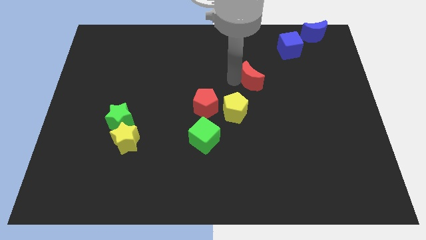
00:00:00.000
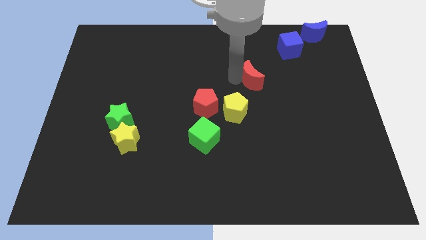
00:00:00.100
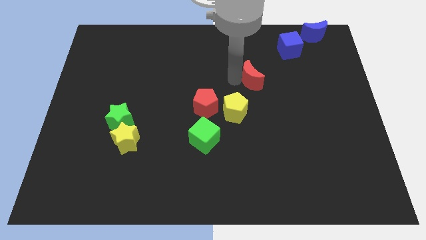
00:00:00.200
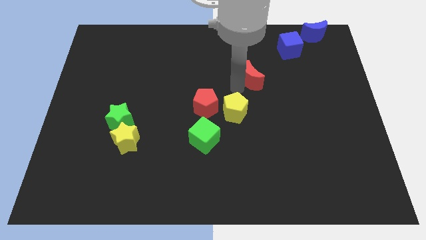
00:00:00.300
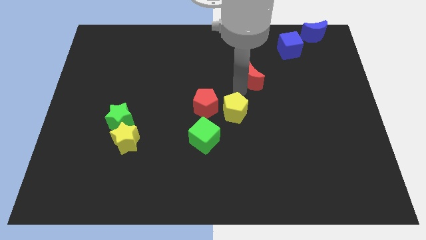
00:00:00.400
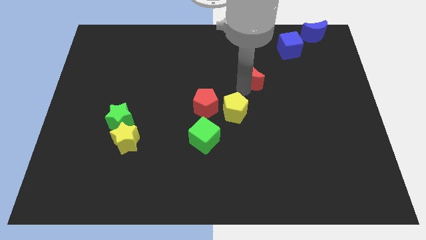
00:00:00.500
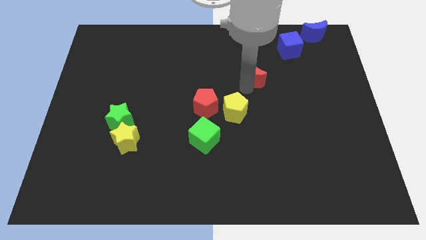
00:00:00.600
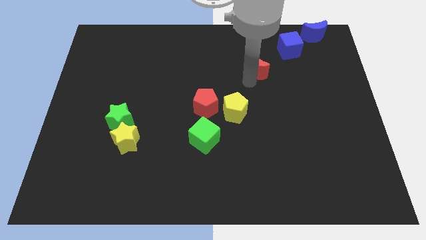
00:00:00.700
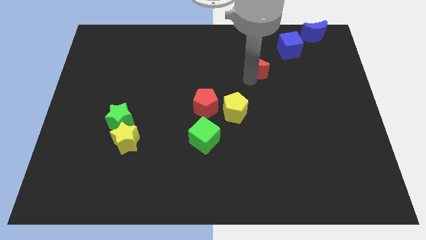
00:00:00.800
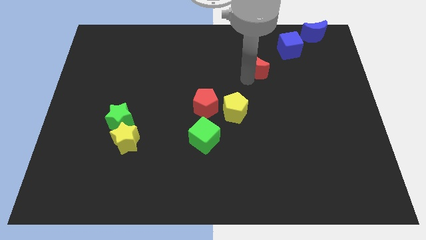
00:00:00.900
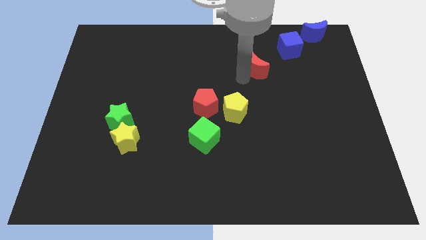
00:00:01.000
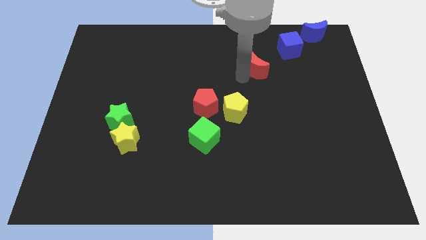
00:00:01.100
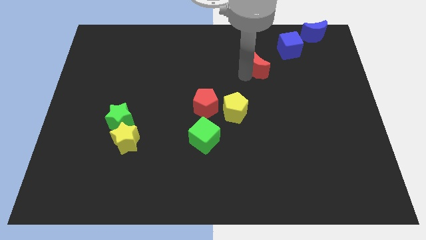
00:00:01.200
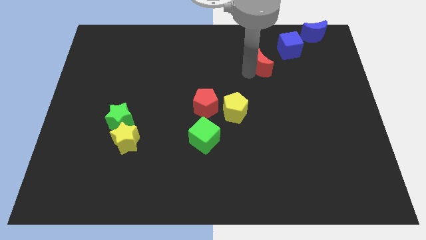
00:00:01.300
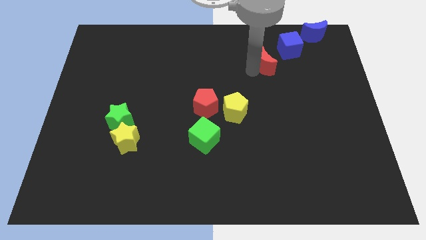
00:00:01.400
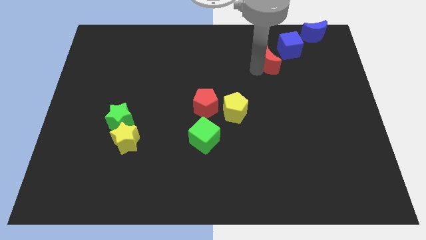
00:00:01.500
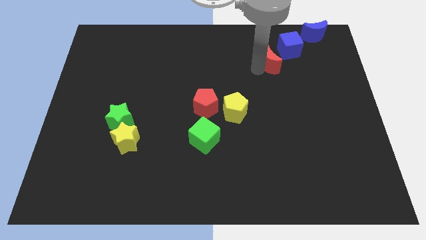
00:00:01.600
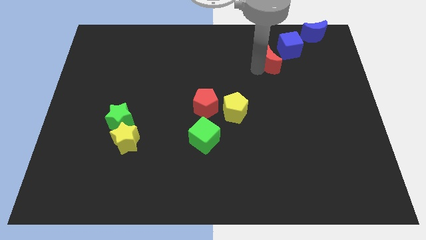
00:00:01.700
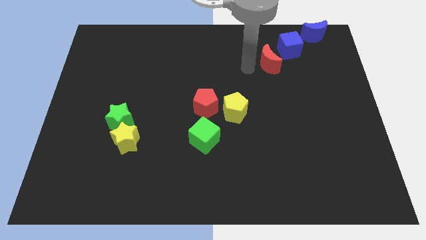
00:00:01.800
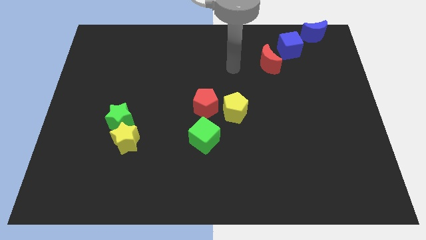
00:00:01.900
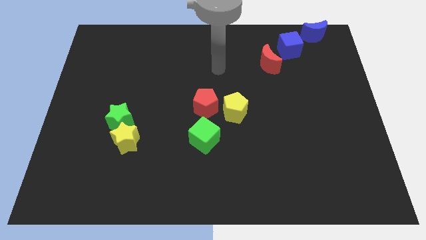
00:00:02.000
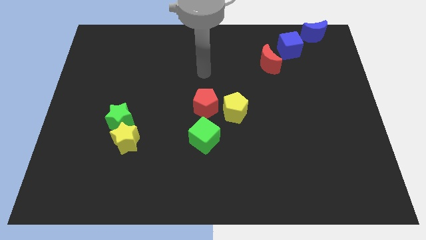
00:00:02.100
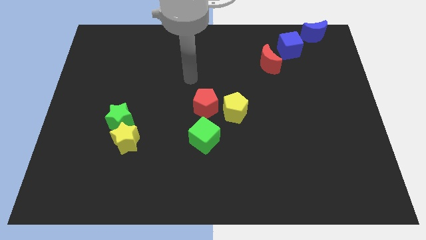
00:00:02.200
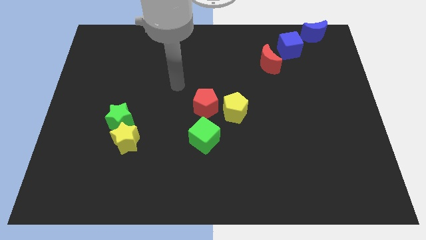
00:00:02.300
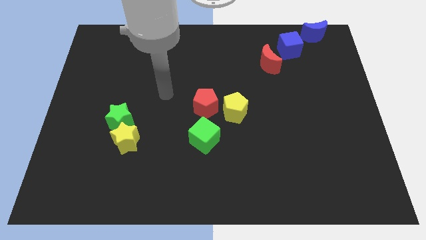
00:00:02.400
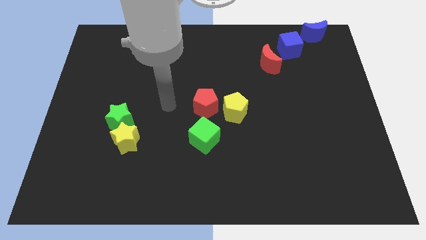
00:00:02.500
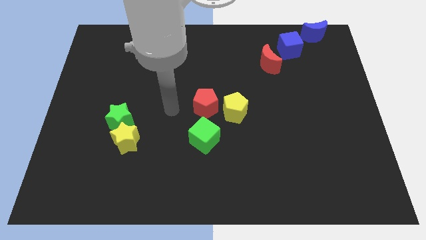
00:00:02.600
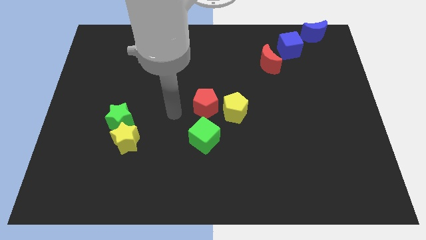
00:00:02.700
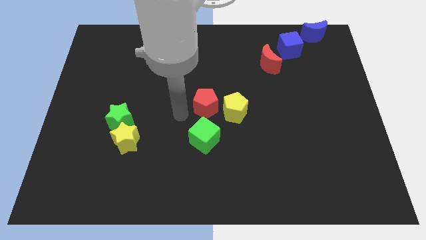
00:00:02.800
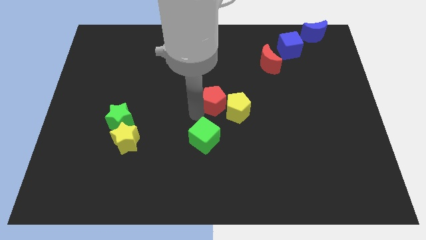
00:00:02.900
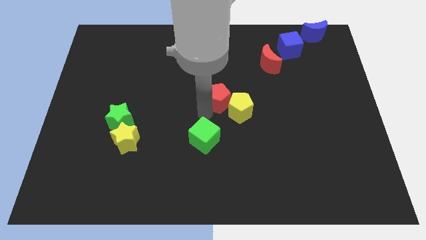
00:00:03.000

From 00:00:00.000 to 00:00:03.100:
move the red moon to the bottom left of the blue cube

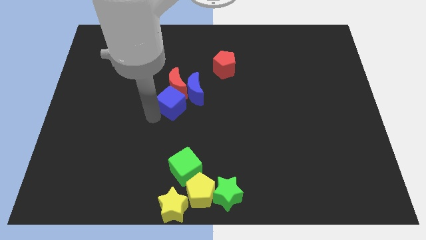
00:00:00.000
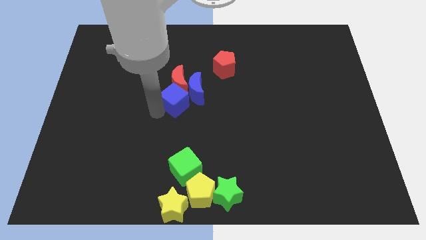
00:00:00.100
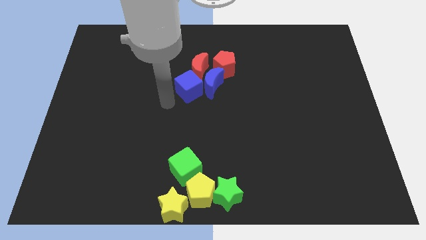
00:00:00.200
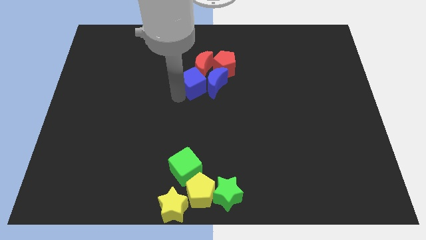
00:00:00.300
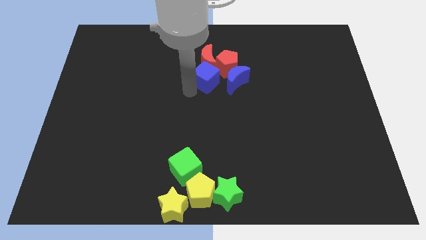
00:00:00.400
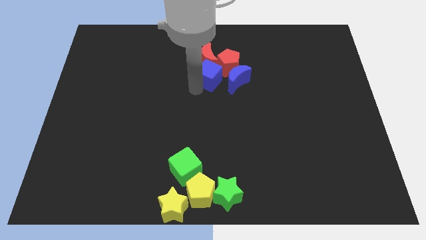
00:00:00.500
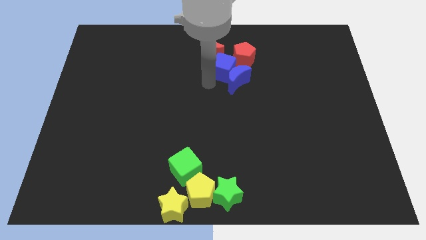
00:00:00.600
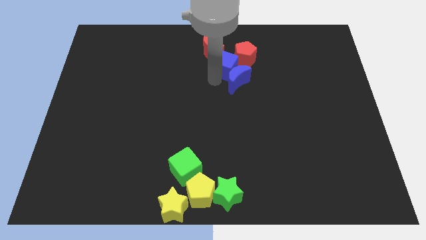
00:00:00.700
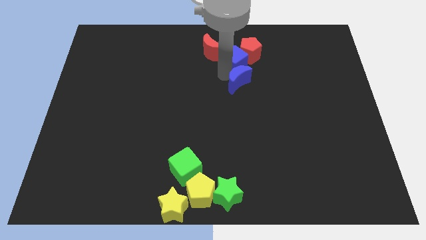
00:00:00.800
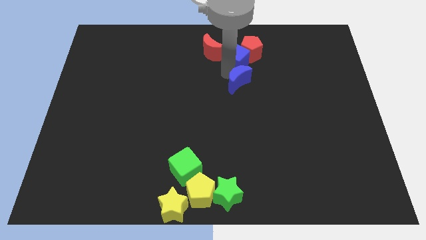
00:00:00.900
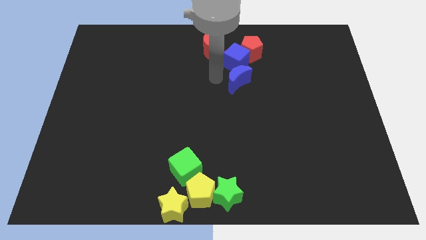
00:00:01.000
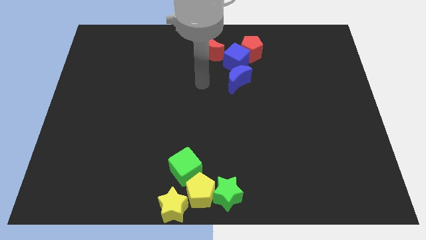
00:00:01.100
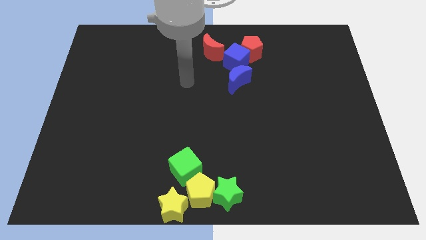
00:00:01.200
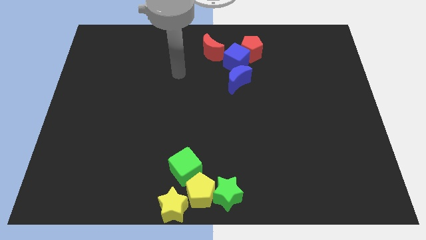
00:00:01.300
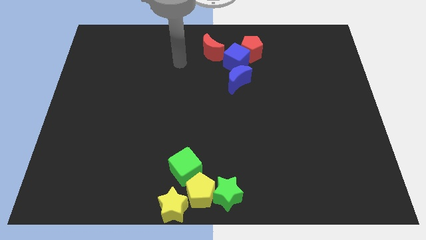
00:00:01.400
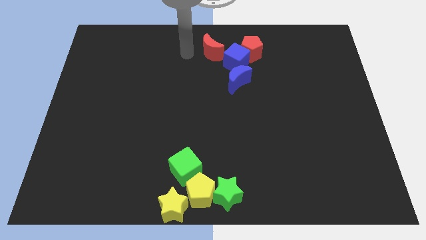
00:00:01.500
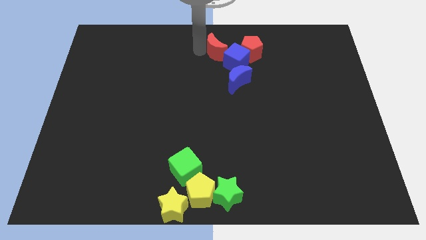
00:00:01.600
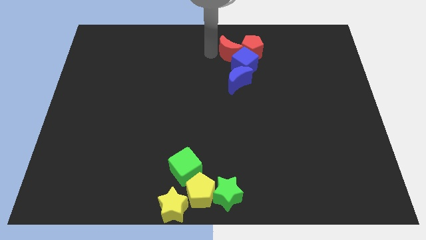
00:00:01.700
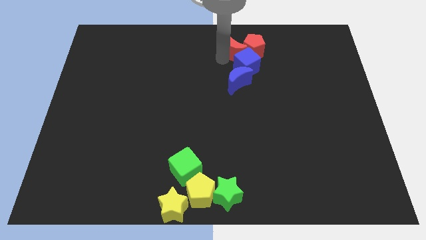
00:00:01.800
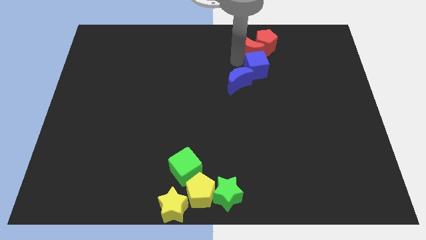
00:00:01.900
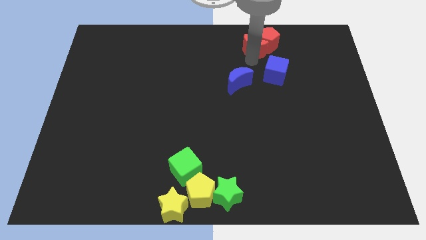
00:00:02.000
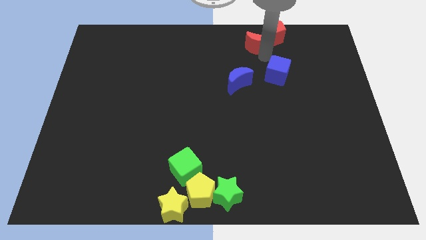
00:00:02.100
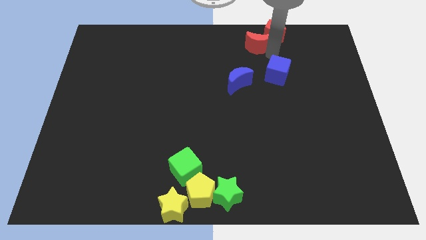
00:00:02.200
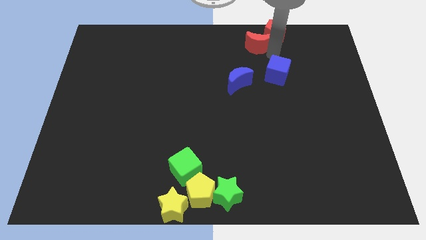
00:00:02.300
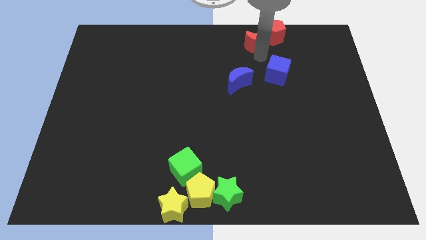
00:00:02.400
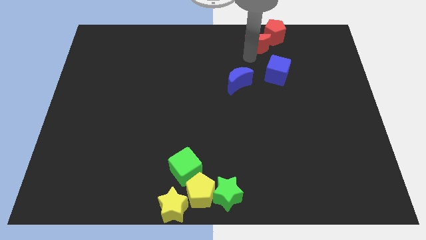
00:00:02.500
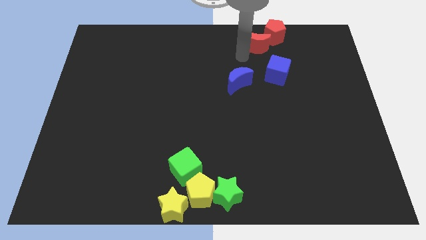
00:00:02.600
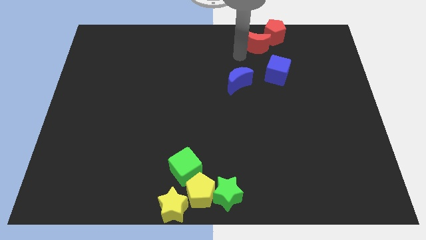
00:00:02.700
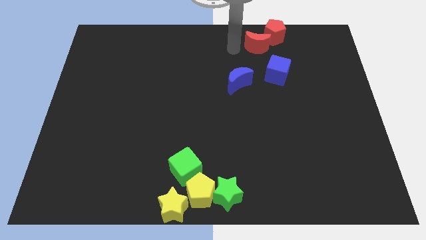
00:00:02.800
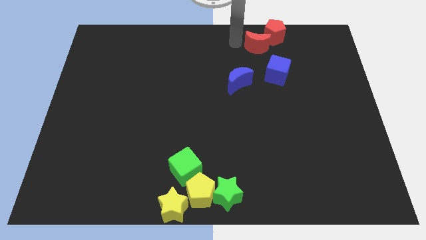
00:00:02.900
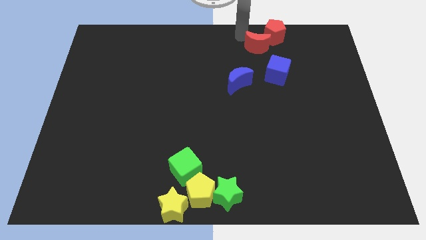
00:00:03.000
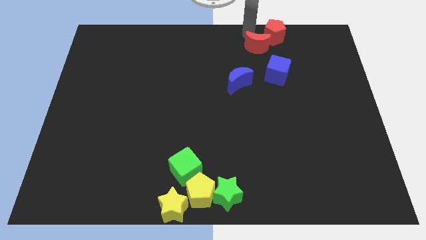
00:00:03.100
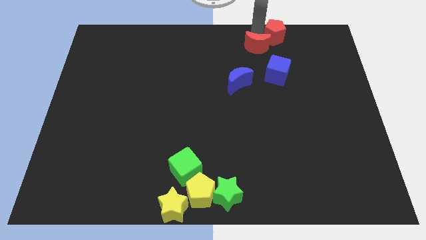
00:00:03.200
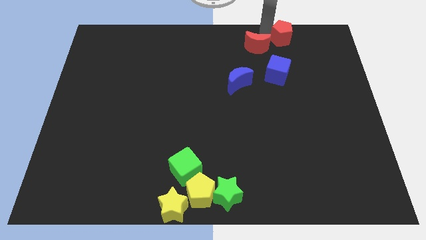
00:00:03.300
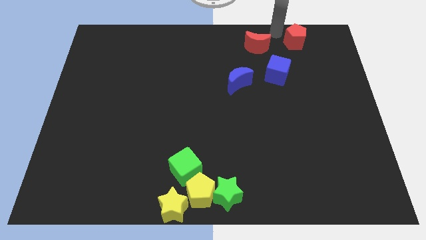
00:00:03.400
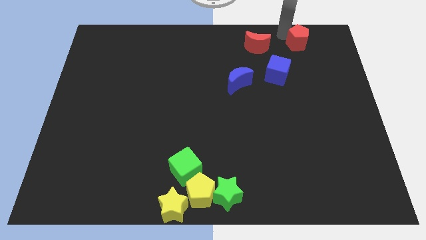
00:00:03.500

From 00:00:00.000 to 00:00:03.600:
move the red moon into the red pentagon

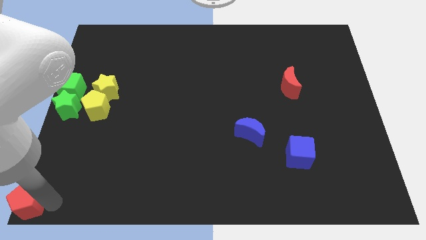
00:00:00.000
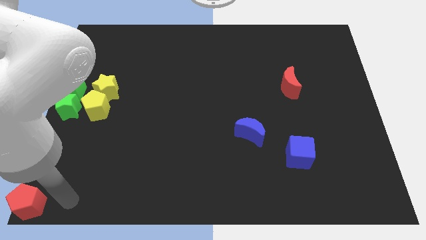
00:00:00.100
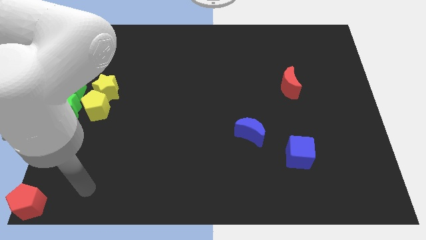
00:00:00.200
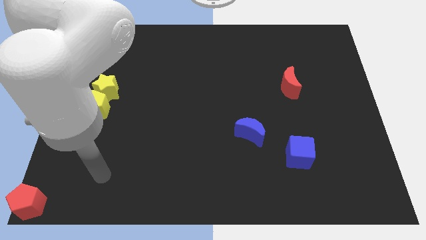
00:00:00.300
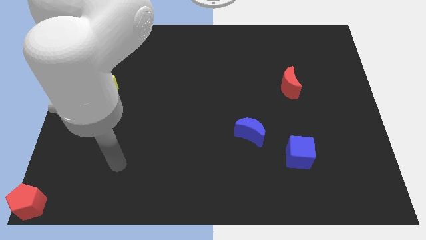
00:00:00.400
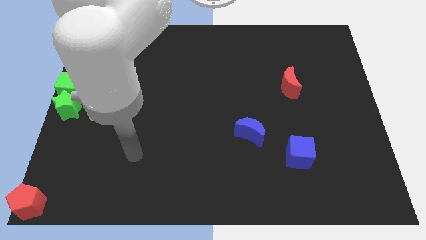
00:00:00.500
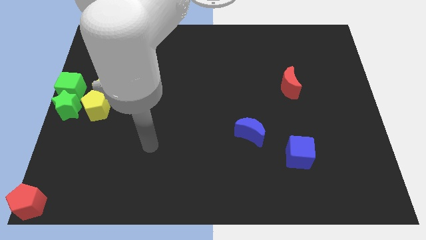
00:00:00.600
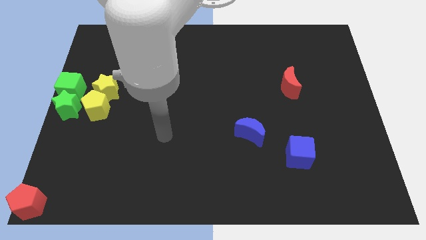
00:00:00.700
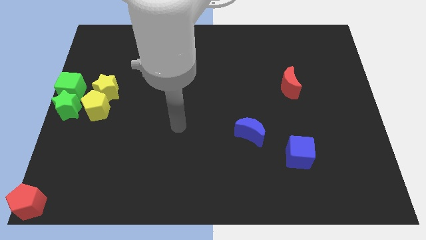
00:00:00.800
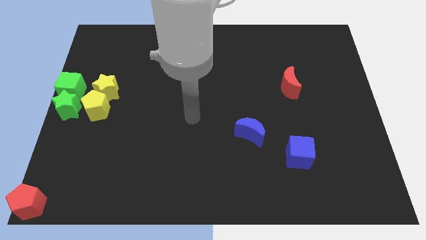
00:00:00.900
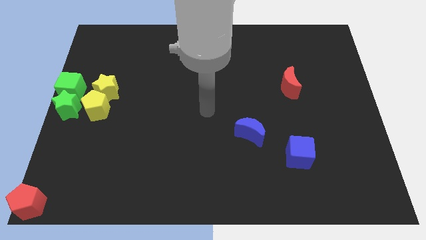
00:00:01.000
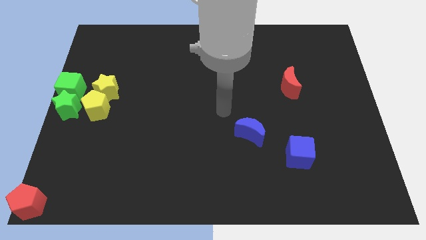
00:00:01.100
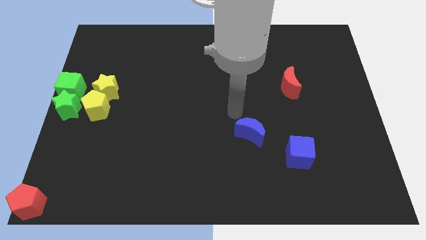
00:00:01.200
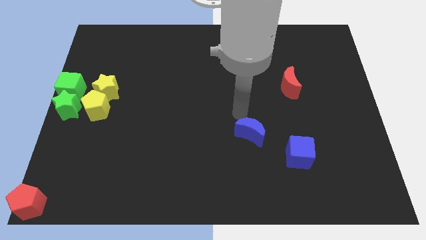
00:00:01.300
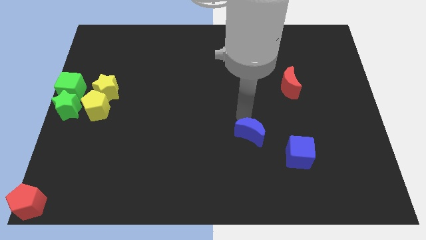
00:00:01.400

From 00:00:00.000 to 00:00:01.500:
move your arm away from red pentagon

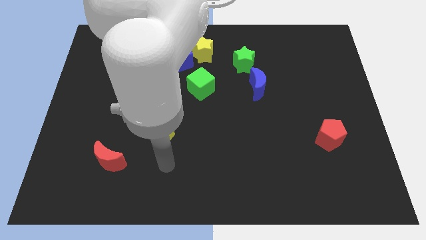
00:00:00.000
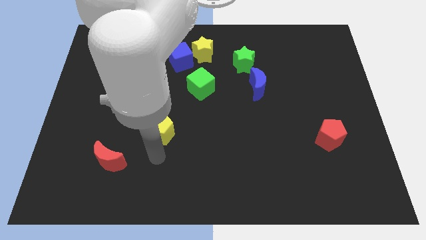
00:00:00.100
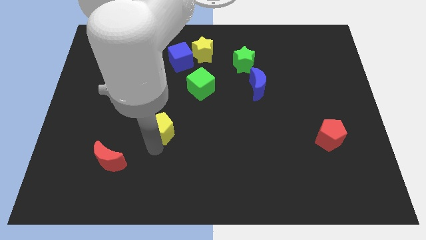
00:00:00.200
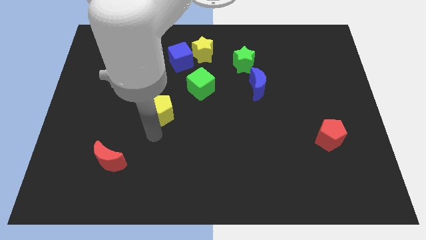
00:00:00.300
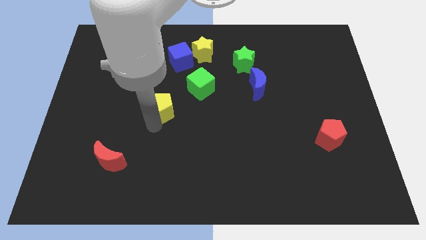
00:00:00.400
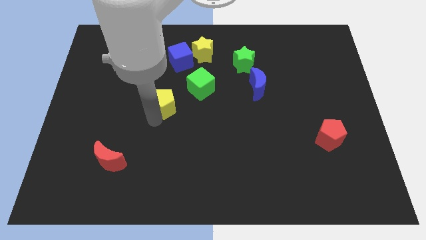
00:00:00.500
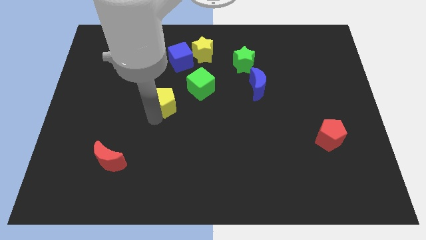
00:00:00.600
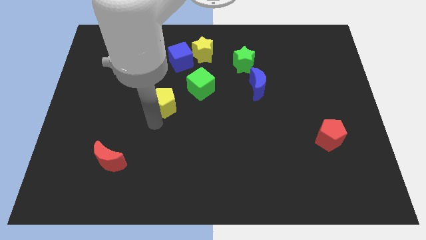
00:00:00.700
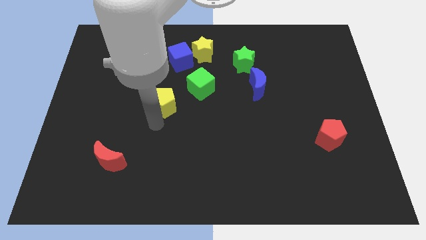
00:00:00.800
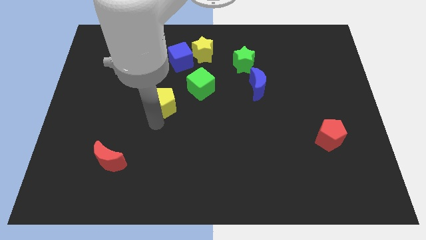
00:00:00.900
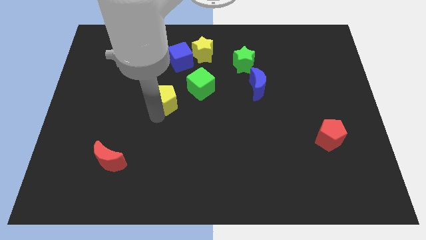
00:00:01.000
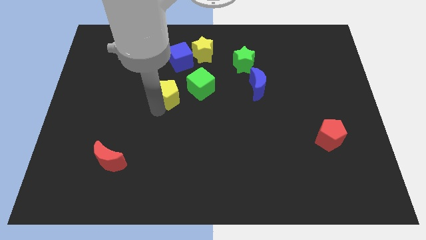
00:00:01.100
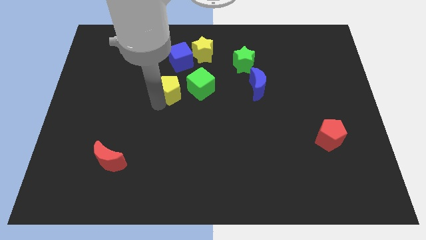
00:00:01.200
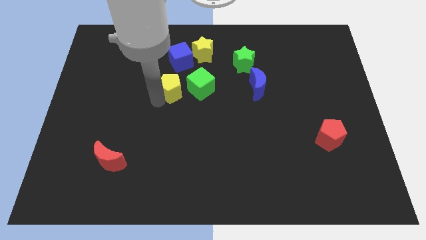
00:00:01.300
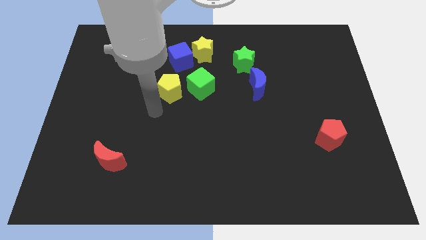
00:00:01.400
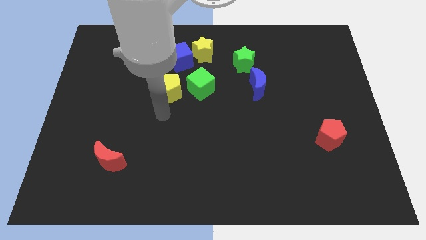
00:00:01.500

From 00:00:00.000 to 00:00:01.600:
place yellow pentagon to the left of green cube
